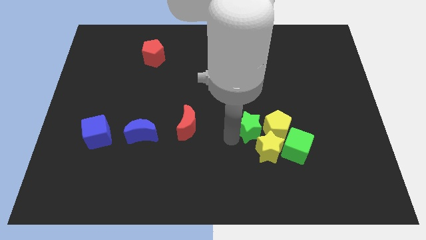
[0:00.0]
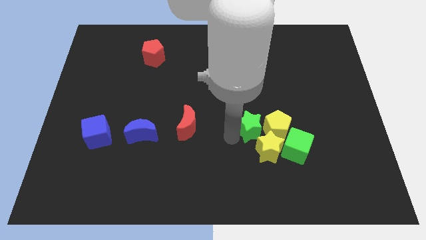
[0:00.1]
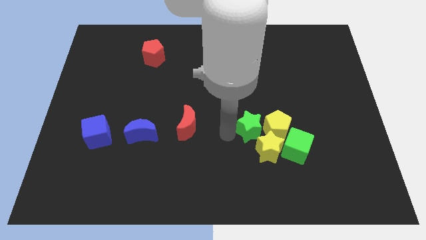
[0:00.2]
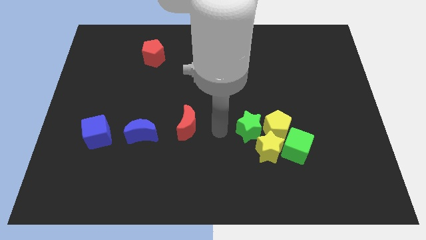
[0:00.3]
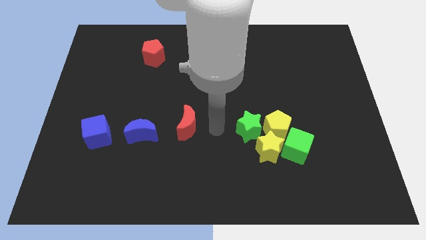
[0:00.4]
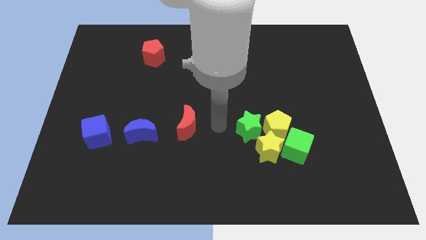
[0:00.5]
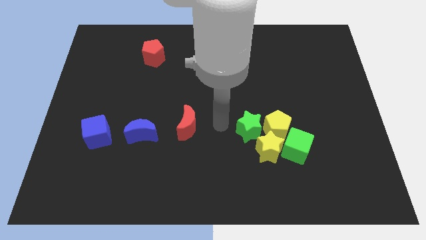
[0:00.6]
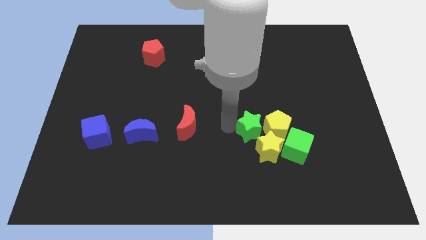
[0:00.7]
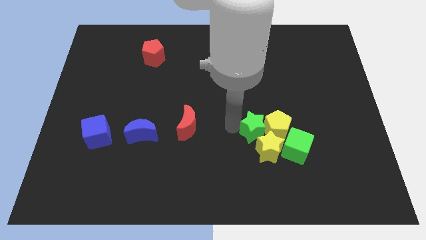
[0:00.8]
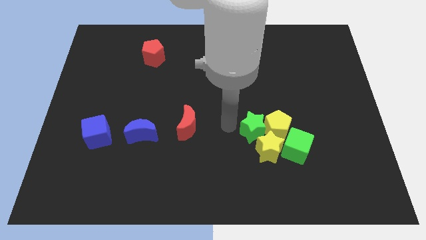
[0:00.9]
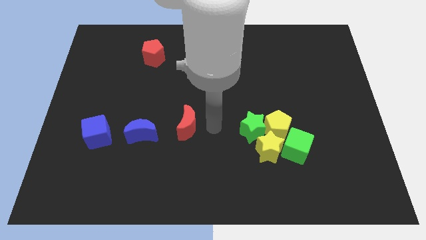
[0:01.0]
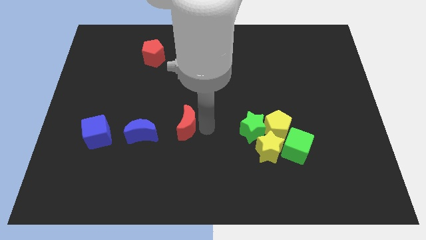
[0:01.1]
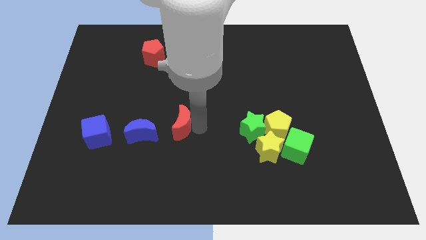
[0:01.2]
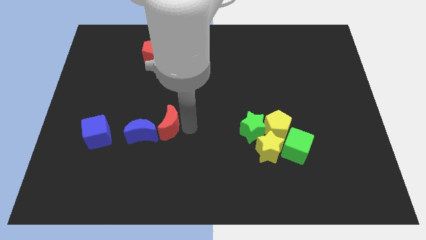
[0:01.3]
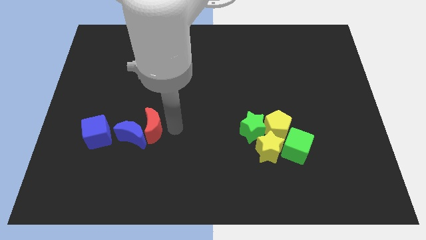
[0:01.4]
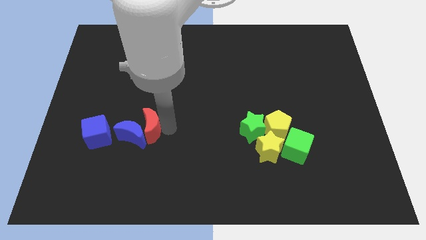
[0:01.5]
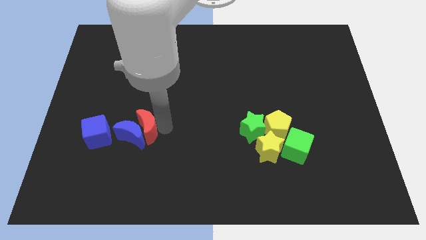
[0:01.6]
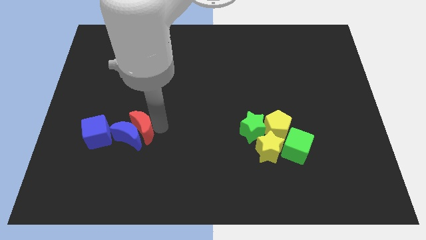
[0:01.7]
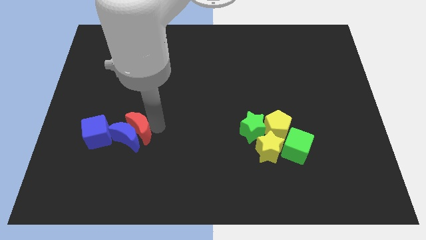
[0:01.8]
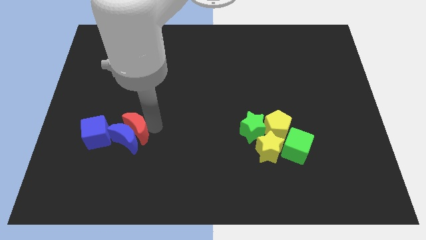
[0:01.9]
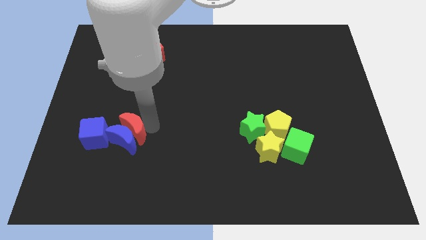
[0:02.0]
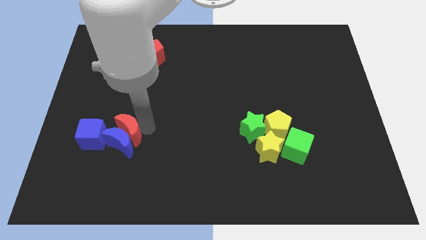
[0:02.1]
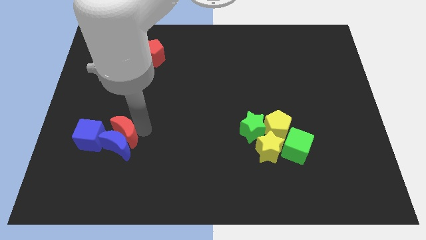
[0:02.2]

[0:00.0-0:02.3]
push the blue crescent along with the red crescent into the blue cube

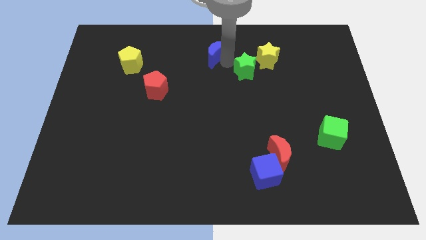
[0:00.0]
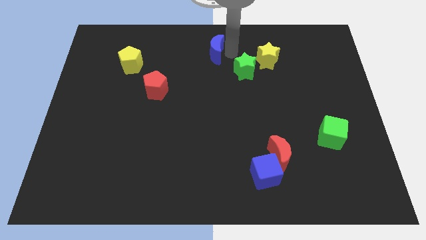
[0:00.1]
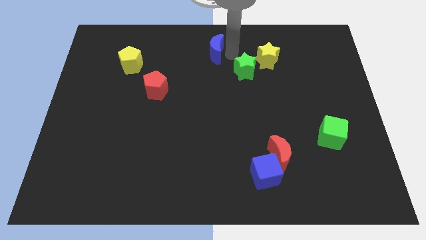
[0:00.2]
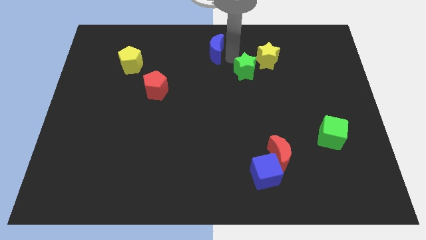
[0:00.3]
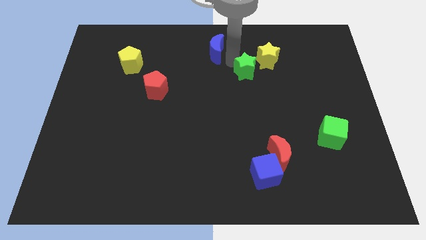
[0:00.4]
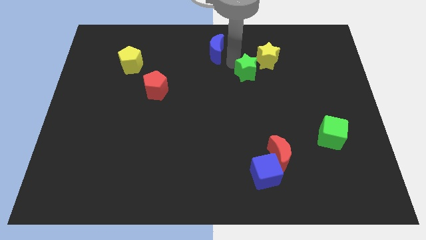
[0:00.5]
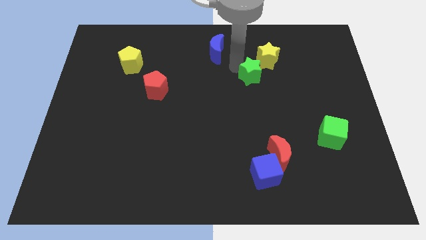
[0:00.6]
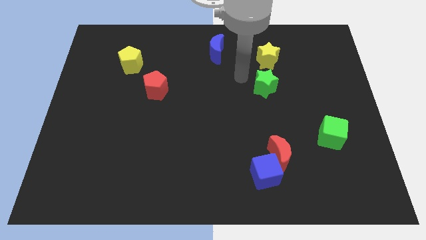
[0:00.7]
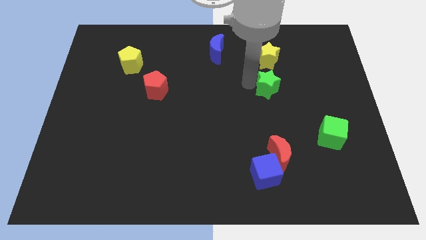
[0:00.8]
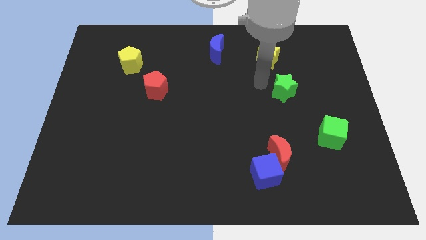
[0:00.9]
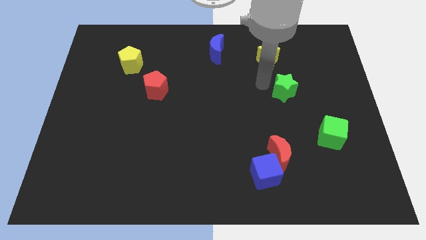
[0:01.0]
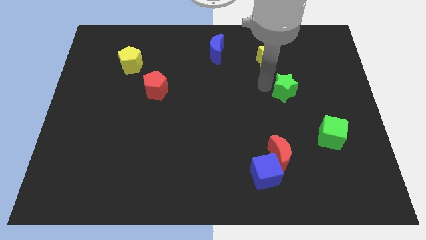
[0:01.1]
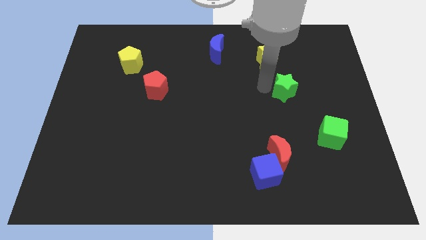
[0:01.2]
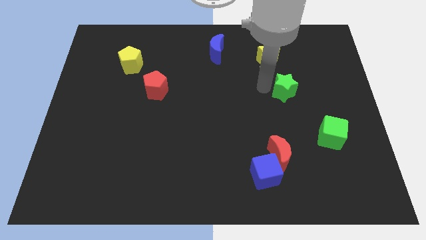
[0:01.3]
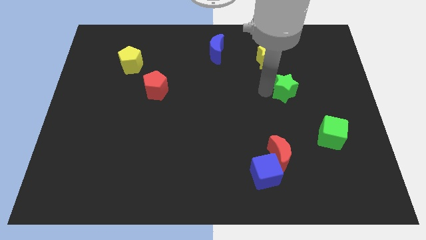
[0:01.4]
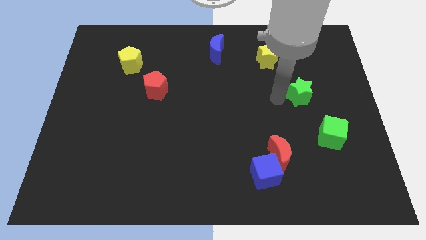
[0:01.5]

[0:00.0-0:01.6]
push green star diagonally downwards

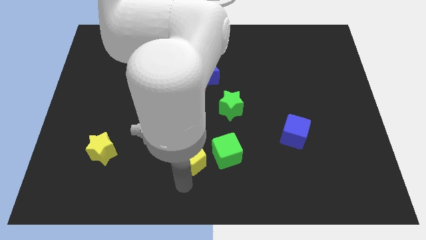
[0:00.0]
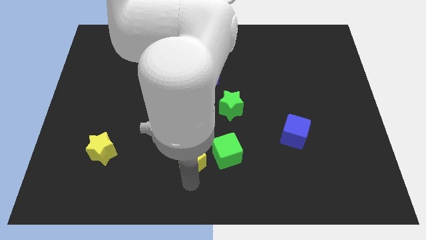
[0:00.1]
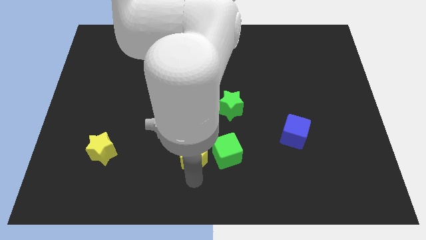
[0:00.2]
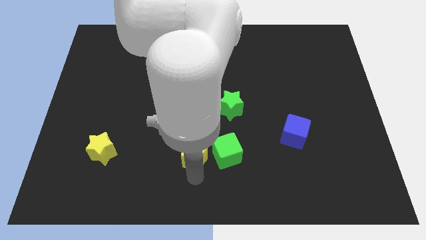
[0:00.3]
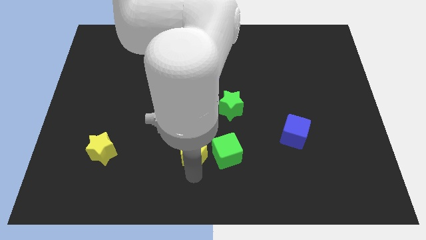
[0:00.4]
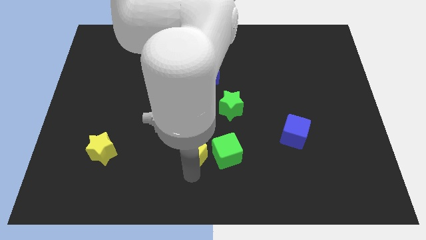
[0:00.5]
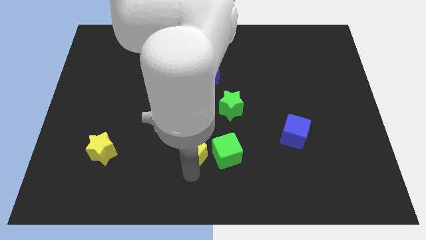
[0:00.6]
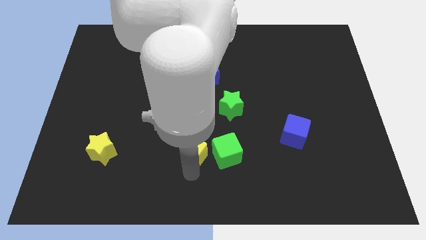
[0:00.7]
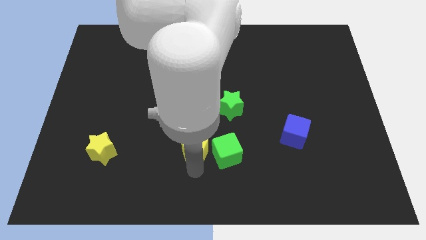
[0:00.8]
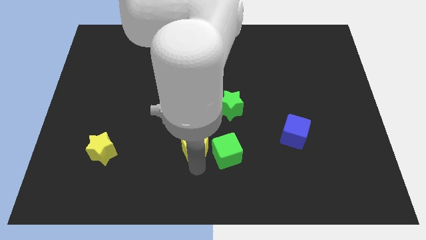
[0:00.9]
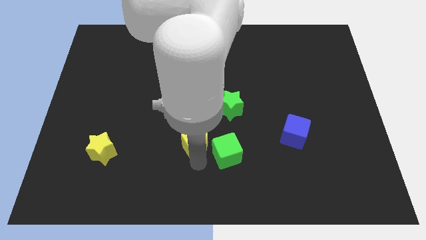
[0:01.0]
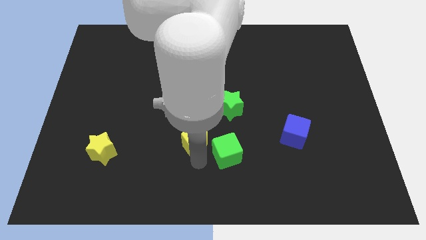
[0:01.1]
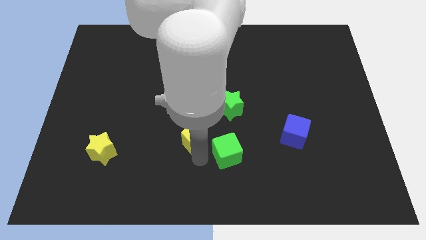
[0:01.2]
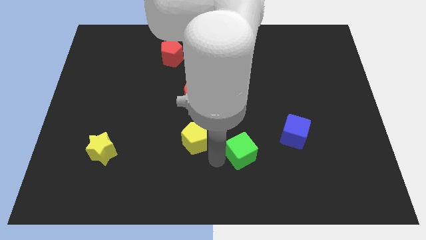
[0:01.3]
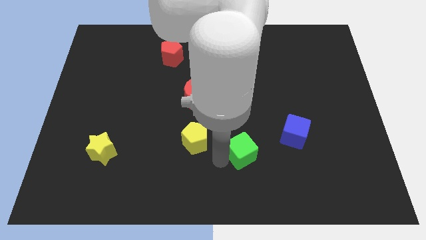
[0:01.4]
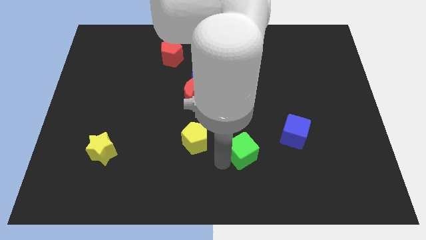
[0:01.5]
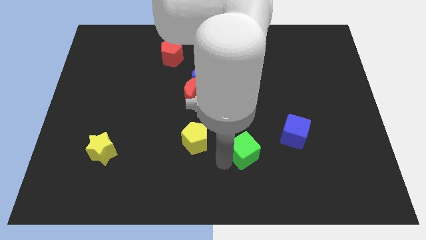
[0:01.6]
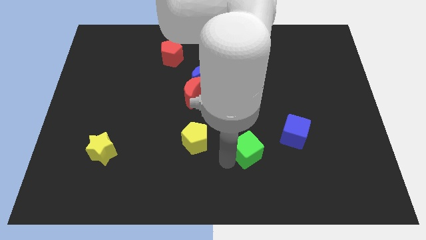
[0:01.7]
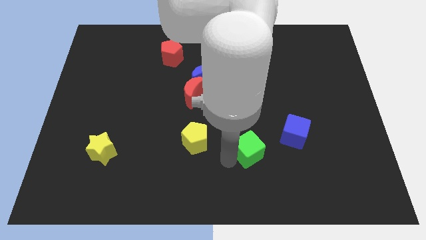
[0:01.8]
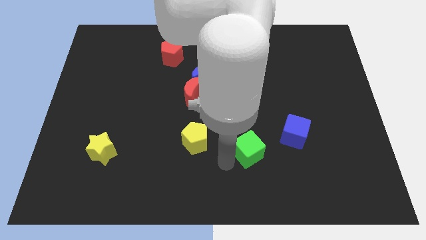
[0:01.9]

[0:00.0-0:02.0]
push yellow pentagon and green cube to make a triangle

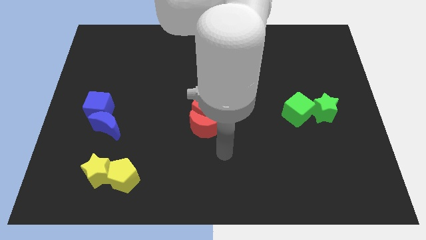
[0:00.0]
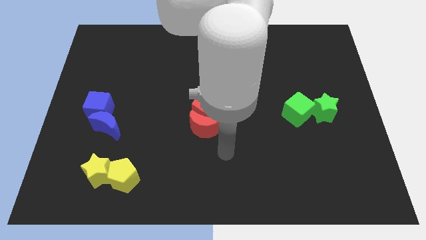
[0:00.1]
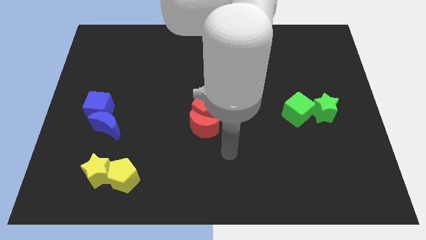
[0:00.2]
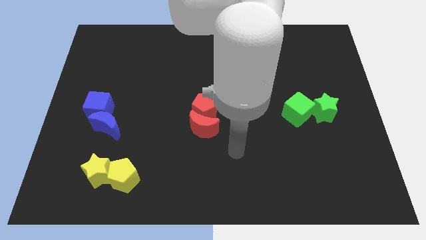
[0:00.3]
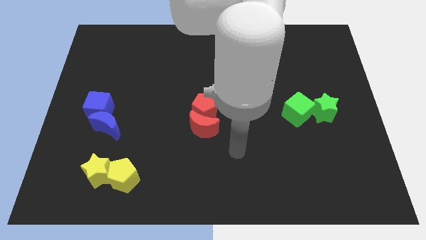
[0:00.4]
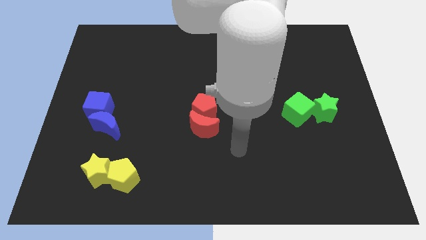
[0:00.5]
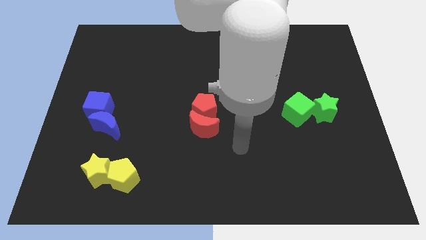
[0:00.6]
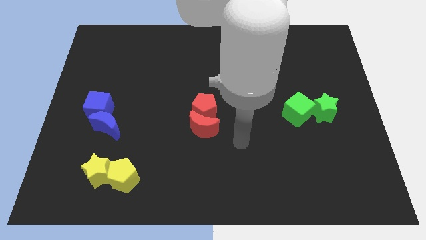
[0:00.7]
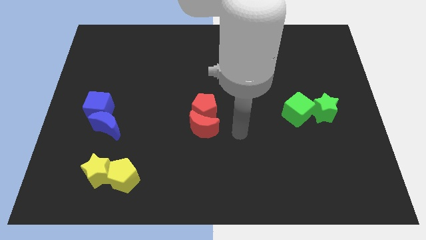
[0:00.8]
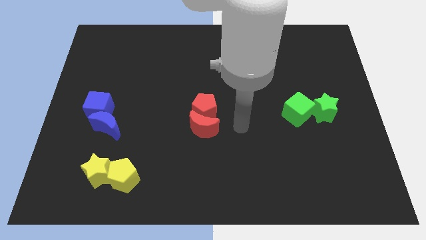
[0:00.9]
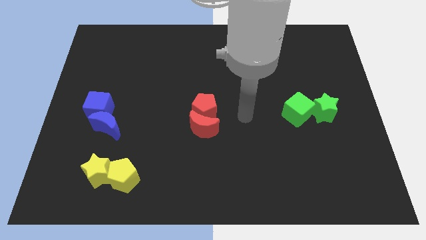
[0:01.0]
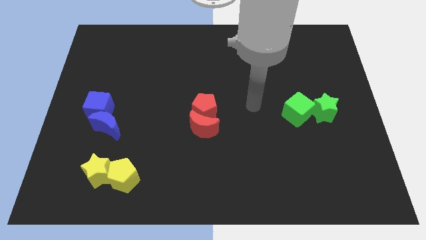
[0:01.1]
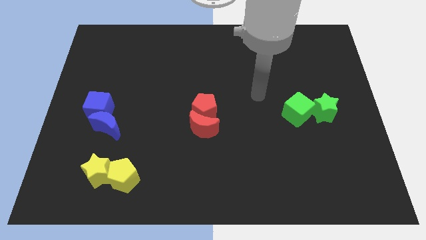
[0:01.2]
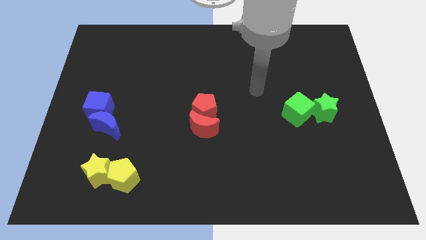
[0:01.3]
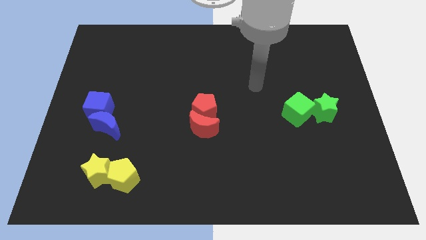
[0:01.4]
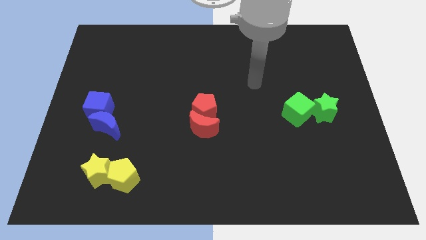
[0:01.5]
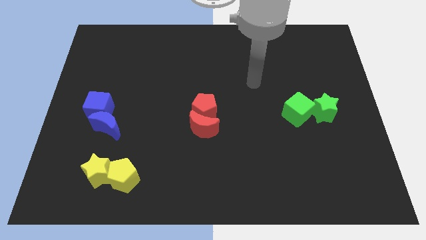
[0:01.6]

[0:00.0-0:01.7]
move your arm away from the red blocks

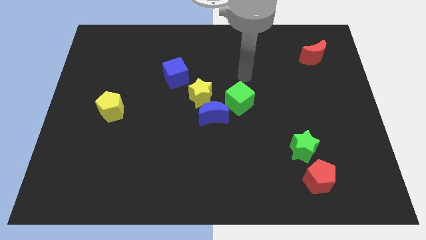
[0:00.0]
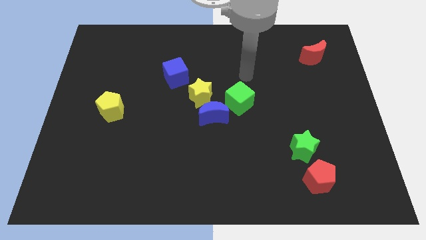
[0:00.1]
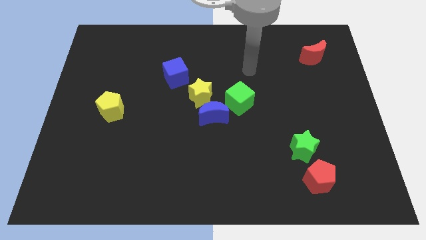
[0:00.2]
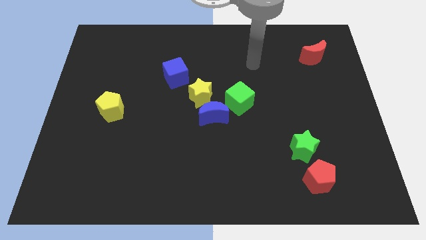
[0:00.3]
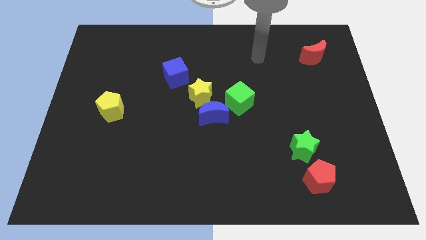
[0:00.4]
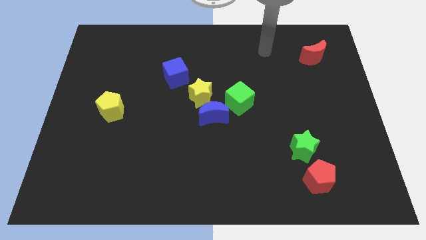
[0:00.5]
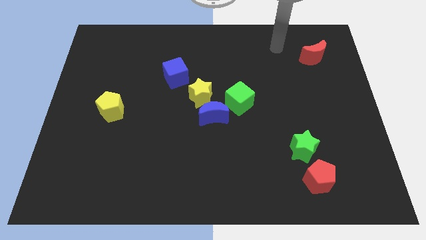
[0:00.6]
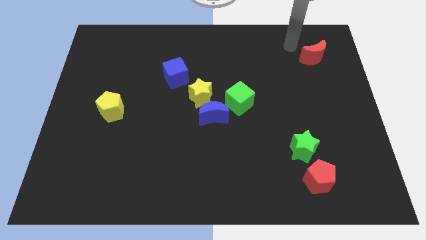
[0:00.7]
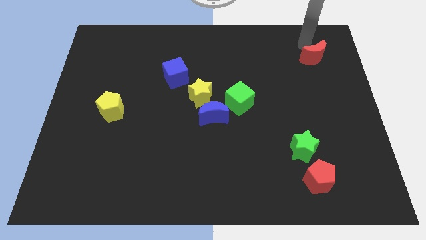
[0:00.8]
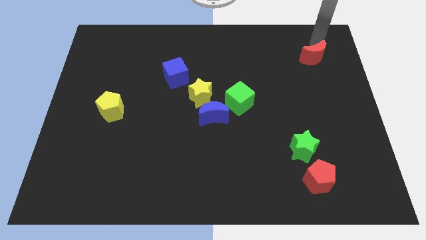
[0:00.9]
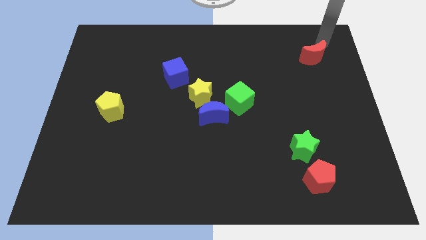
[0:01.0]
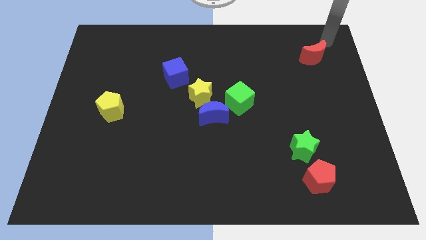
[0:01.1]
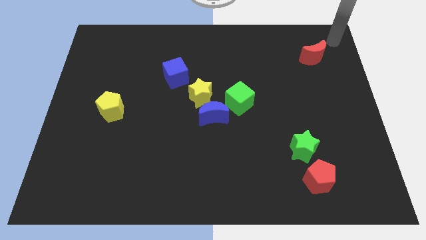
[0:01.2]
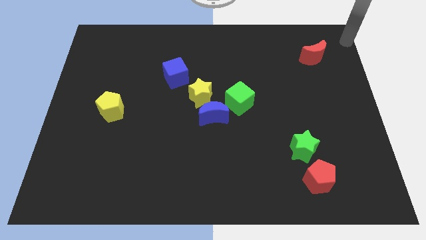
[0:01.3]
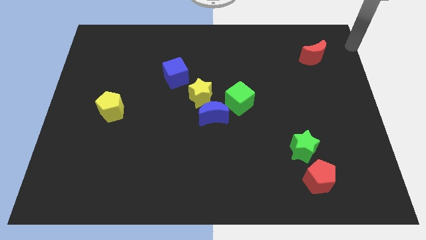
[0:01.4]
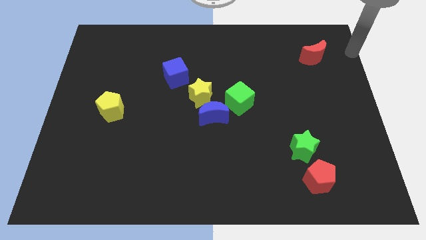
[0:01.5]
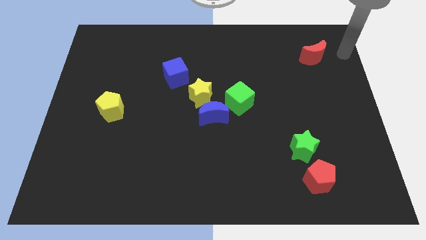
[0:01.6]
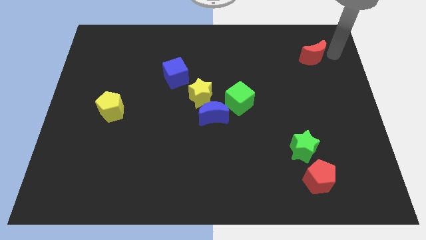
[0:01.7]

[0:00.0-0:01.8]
place your hand to the right of the red crescent
